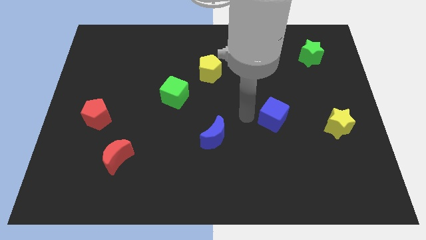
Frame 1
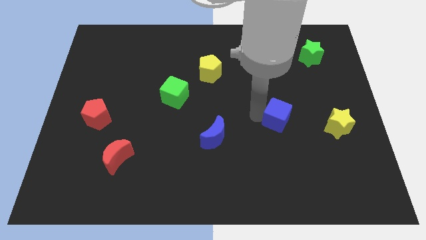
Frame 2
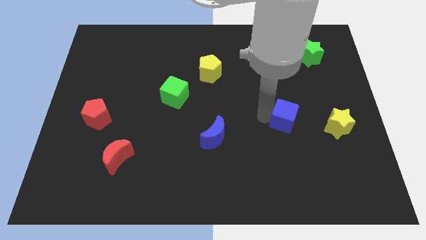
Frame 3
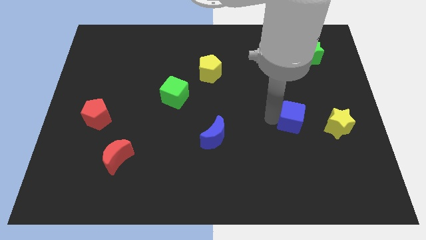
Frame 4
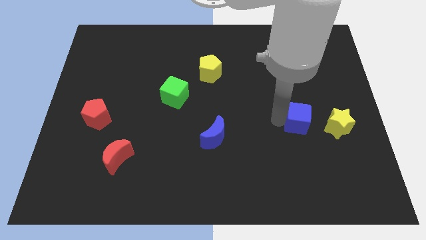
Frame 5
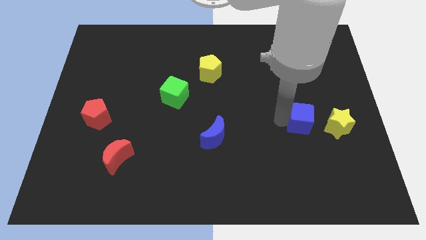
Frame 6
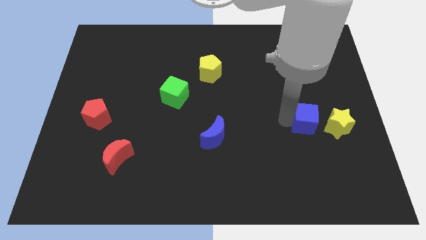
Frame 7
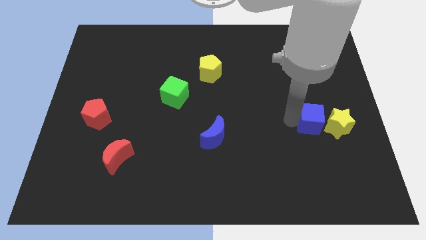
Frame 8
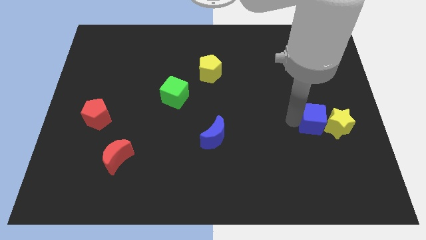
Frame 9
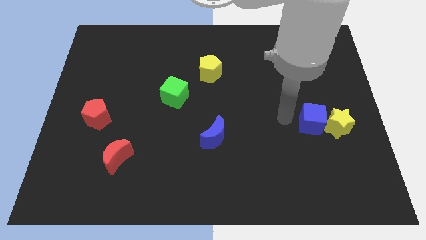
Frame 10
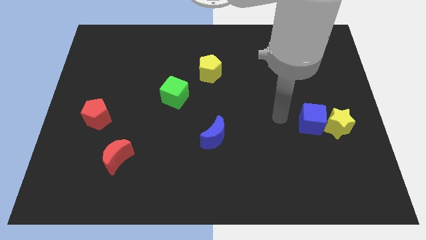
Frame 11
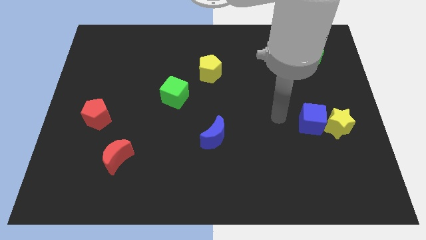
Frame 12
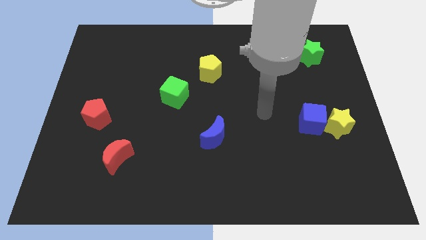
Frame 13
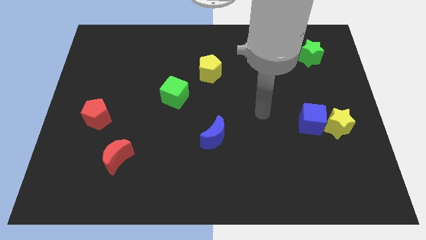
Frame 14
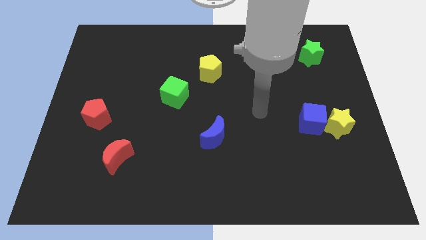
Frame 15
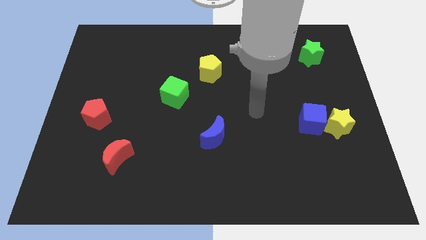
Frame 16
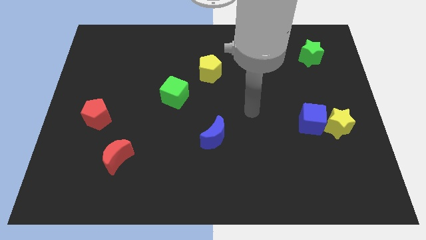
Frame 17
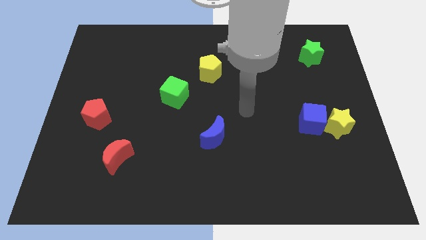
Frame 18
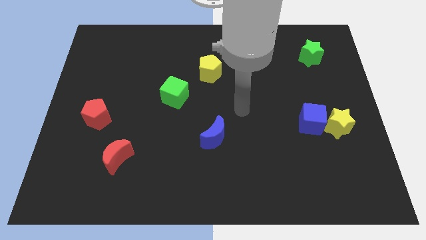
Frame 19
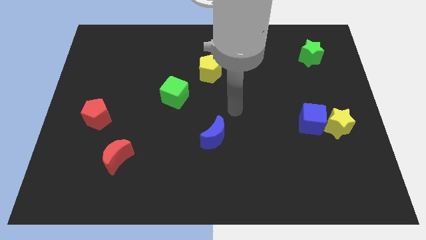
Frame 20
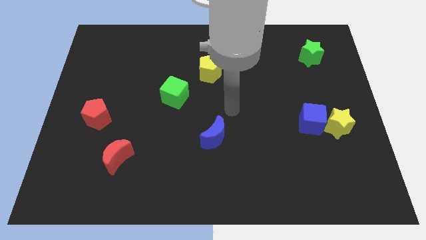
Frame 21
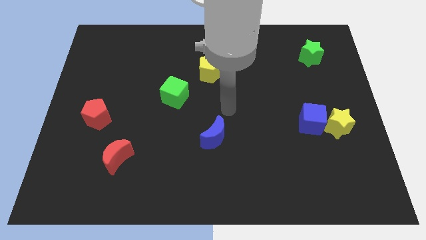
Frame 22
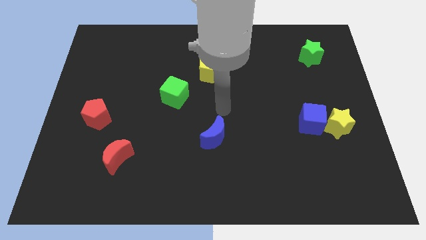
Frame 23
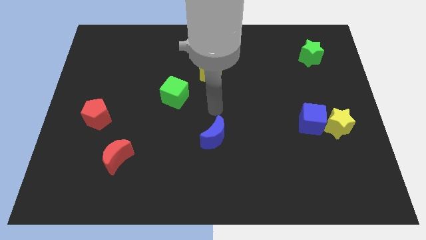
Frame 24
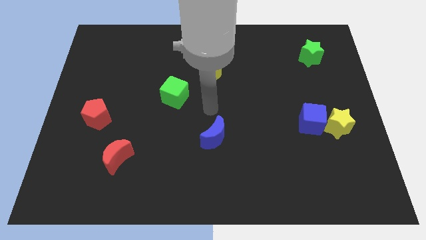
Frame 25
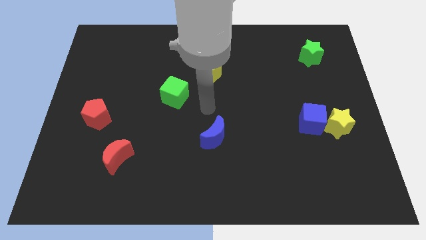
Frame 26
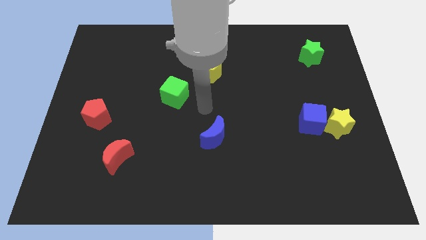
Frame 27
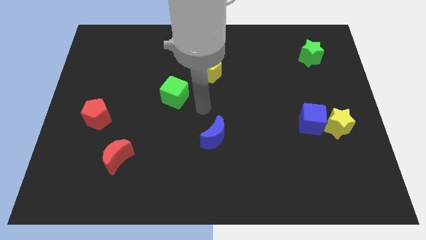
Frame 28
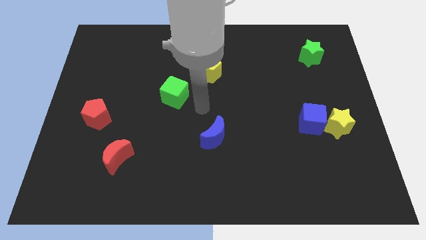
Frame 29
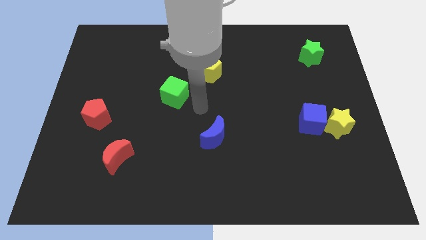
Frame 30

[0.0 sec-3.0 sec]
push the blue cube to the left of the yellow star

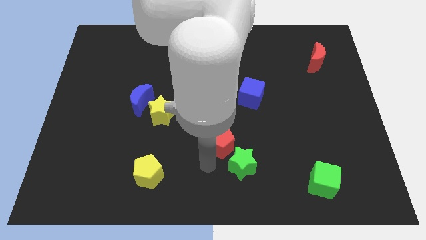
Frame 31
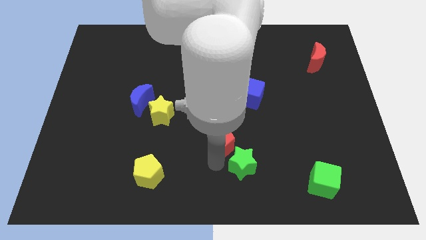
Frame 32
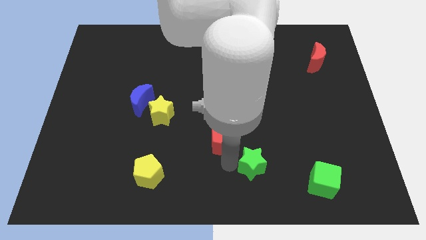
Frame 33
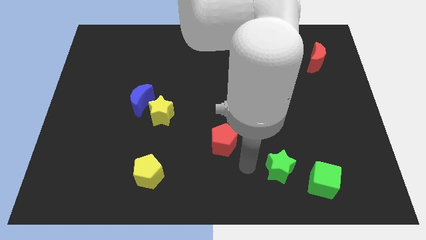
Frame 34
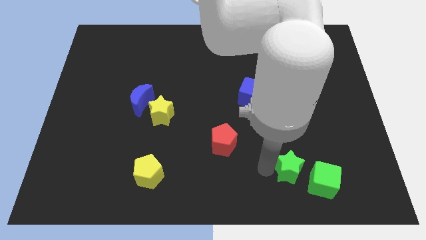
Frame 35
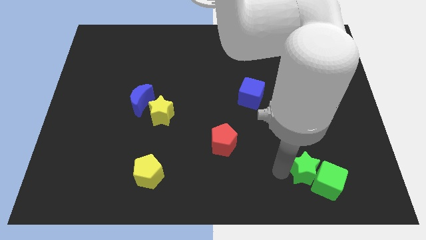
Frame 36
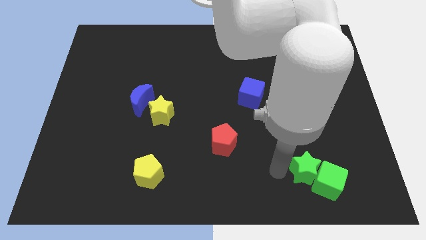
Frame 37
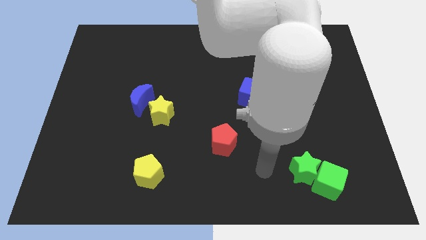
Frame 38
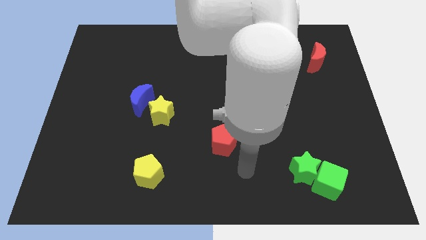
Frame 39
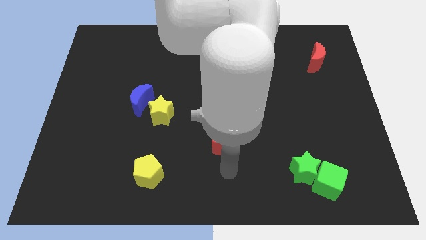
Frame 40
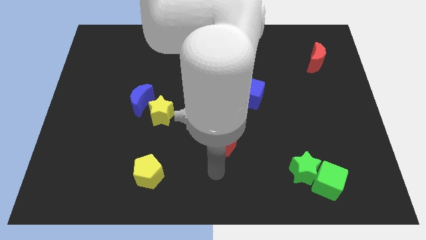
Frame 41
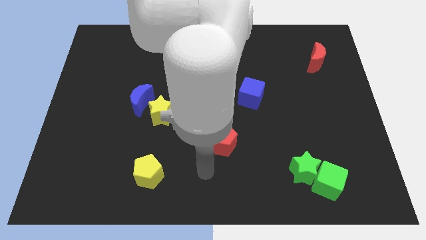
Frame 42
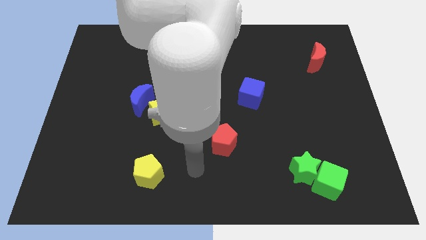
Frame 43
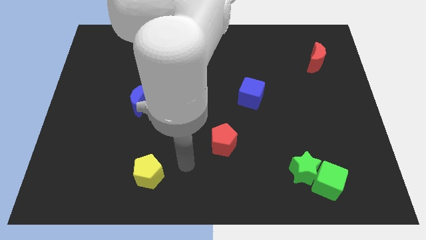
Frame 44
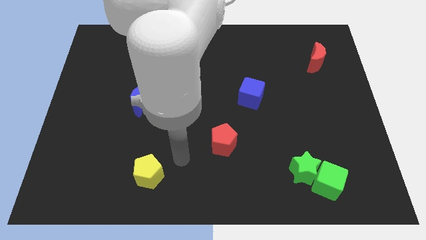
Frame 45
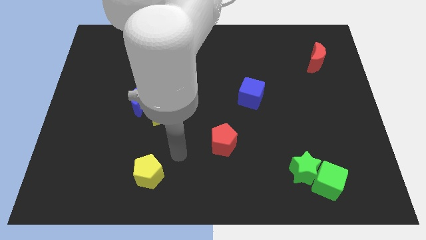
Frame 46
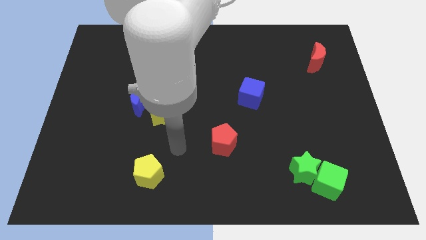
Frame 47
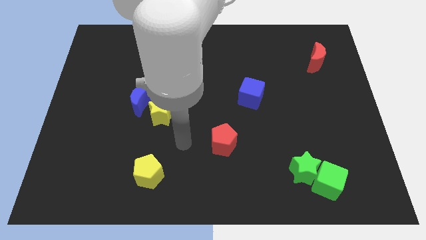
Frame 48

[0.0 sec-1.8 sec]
push the green star to the top left side of the green cube

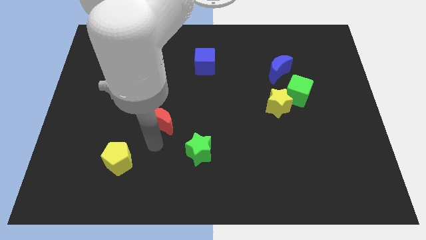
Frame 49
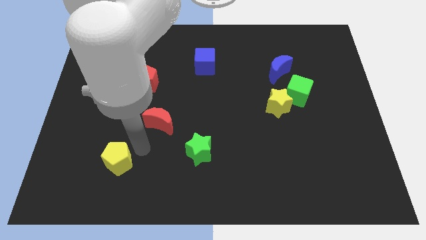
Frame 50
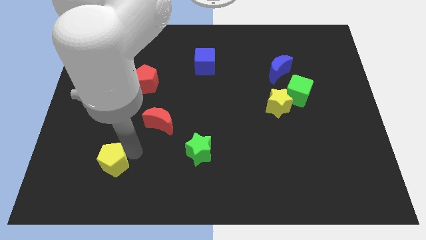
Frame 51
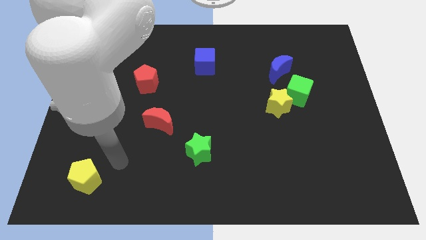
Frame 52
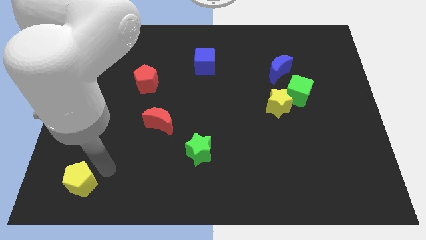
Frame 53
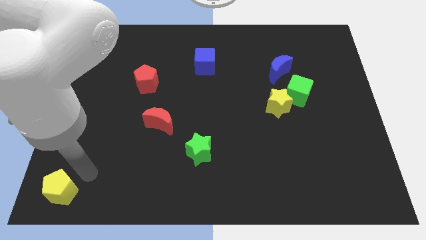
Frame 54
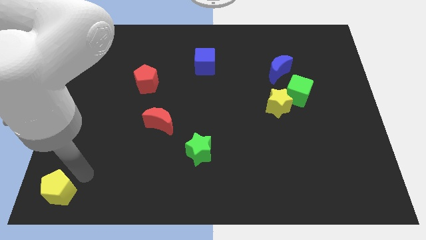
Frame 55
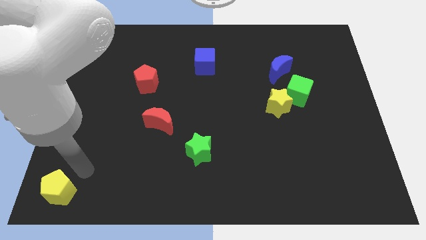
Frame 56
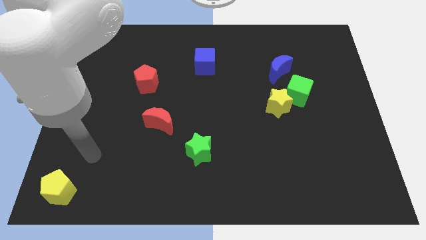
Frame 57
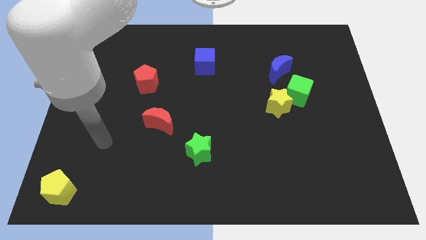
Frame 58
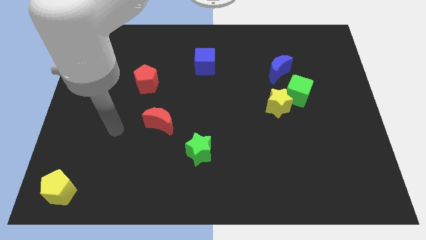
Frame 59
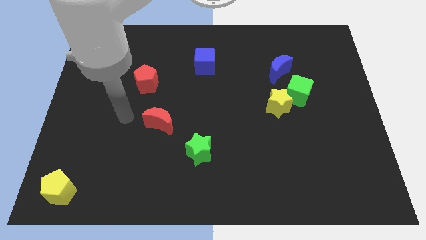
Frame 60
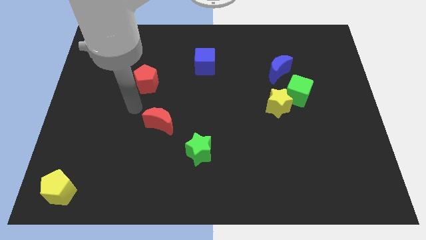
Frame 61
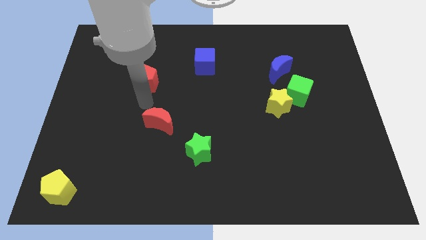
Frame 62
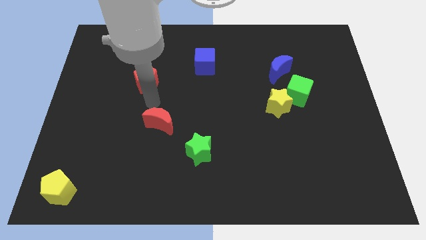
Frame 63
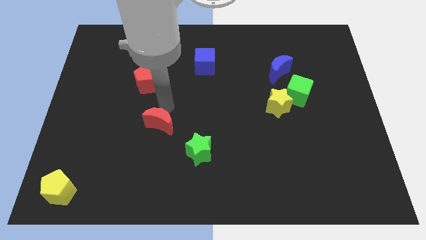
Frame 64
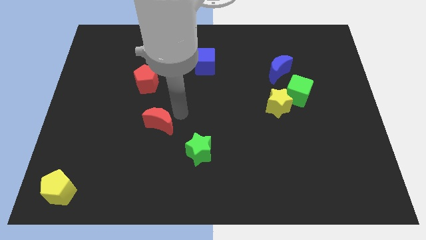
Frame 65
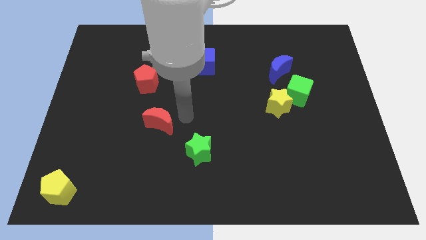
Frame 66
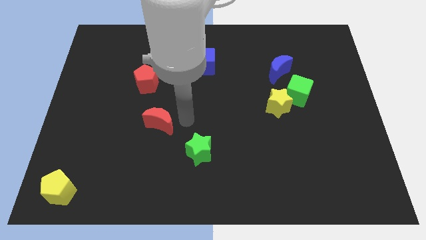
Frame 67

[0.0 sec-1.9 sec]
move the yellow pentagon bottom left corner

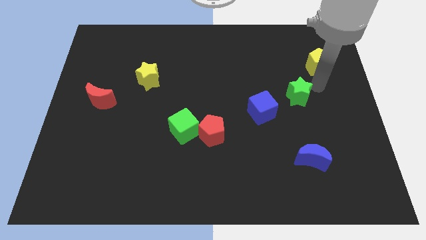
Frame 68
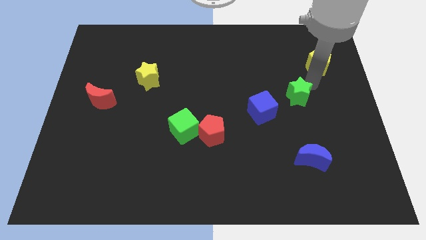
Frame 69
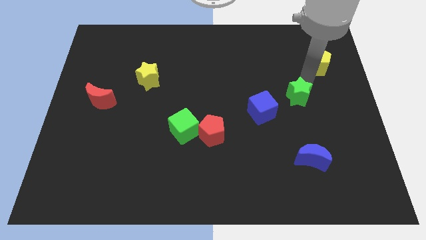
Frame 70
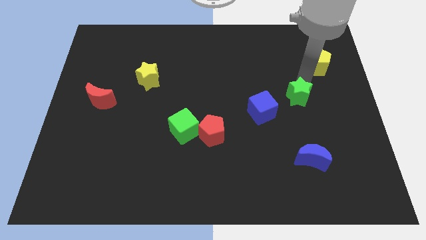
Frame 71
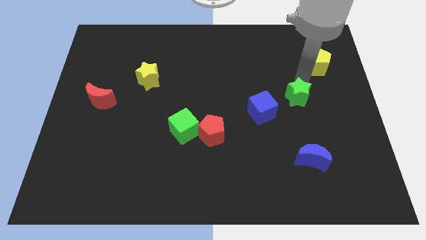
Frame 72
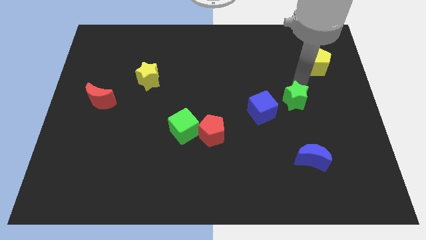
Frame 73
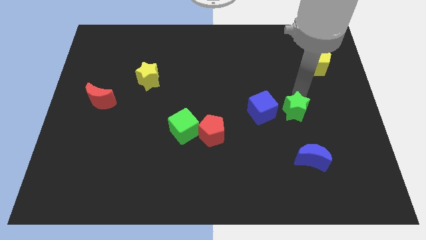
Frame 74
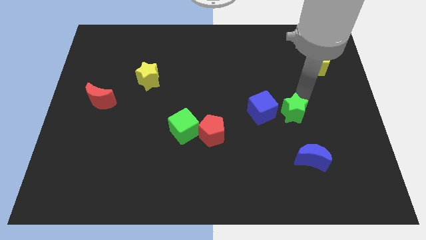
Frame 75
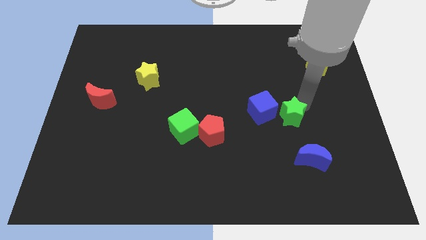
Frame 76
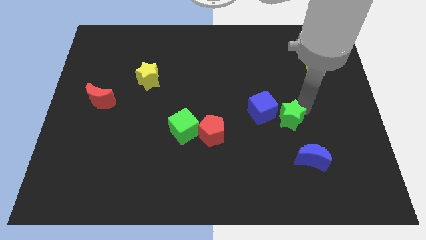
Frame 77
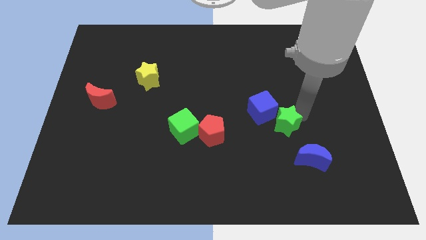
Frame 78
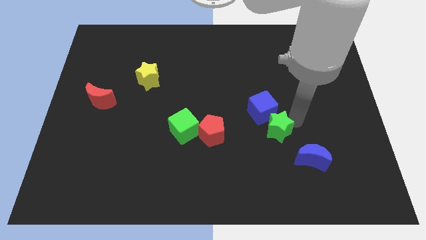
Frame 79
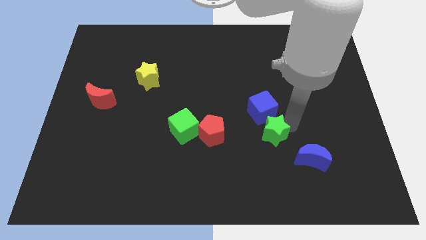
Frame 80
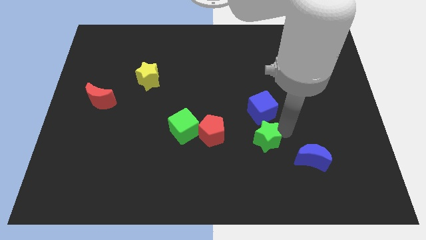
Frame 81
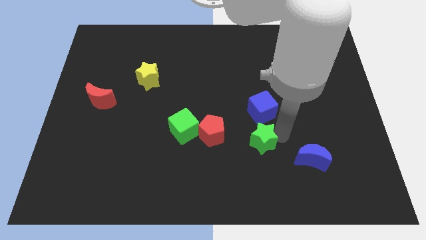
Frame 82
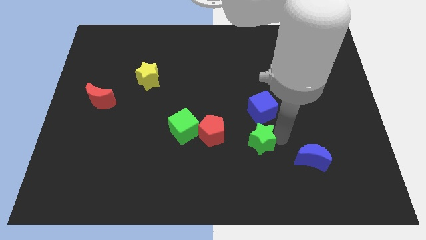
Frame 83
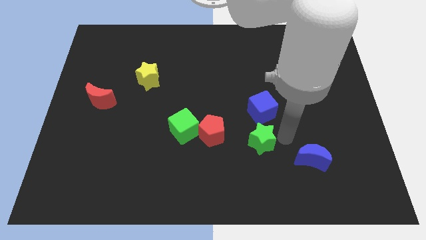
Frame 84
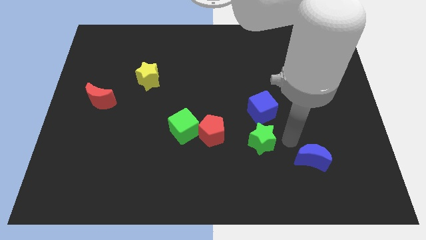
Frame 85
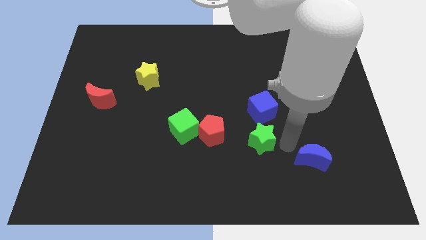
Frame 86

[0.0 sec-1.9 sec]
place the green star to the bottom of the blue cube

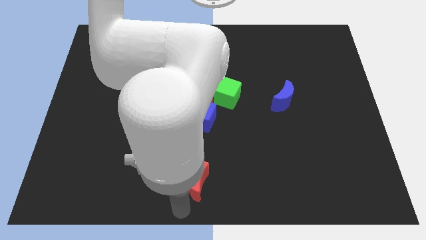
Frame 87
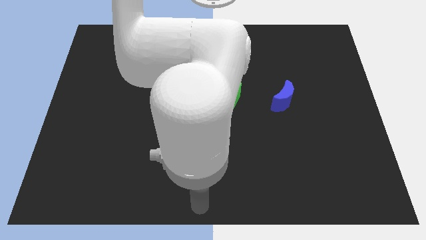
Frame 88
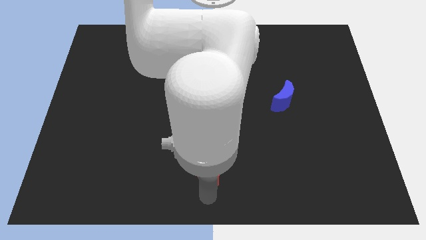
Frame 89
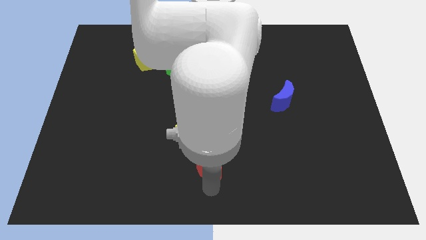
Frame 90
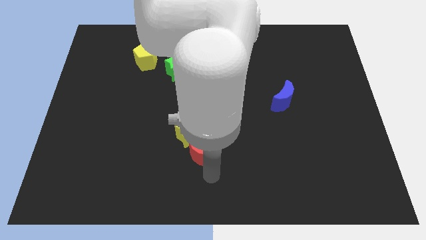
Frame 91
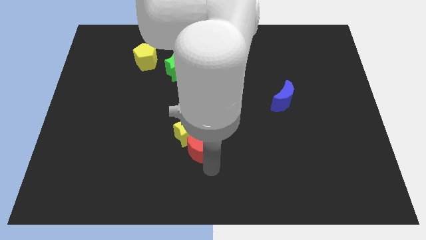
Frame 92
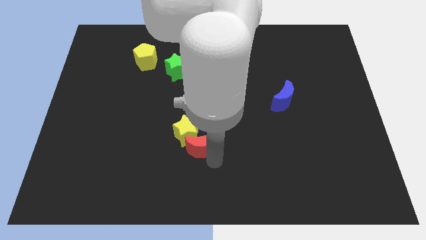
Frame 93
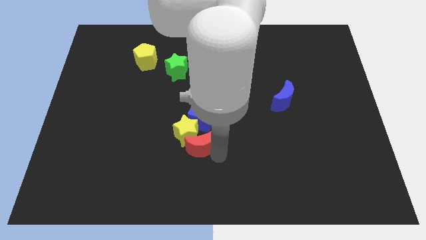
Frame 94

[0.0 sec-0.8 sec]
move the red pentagon into the yellow star
